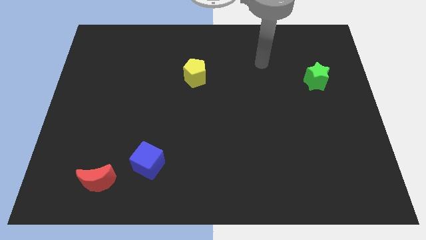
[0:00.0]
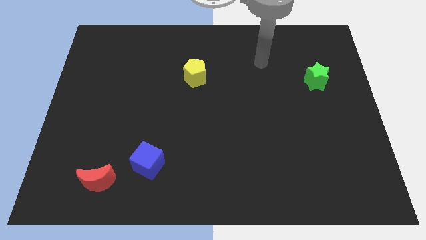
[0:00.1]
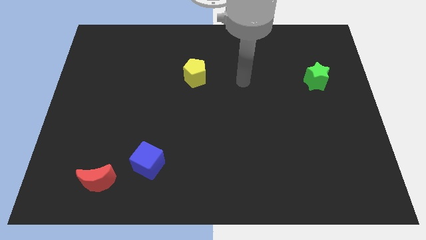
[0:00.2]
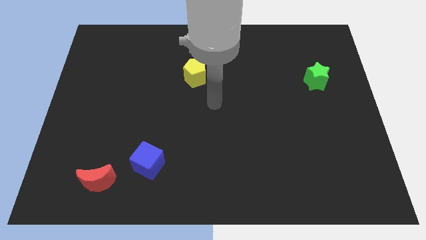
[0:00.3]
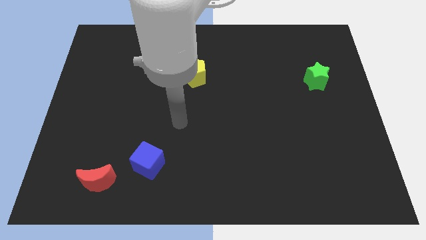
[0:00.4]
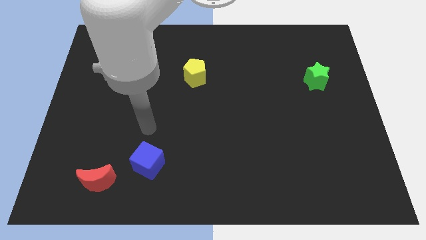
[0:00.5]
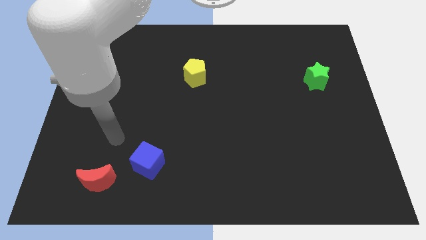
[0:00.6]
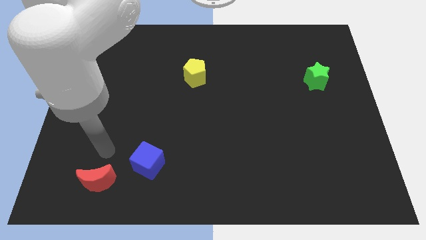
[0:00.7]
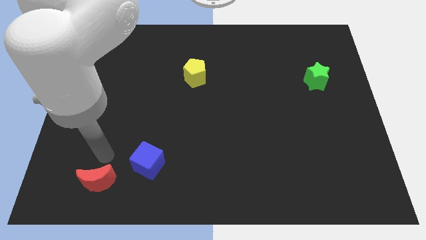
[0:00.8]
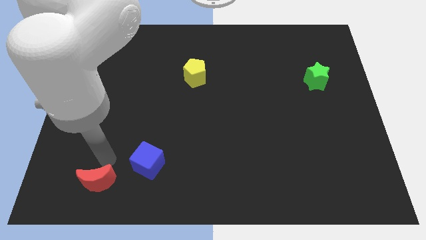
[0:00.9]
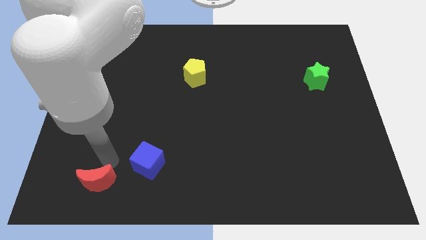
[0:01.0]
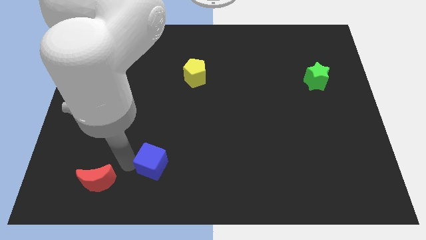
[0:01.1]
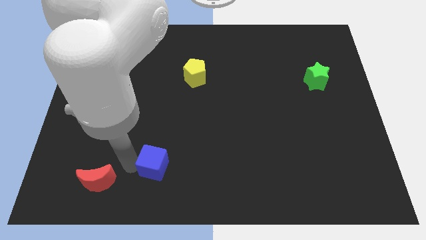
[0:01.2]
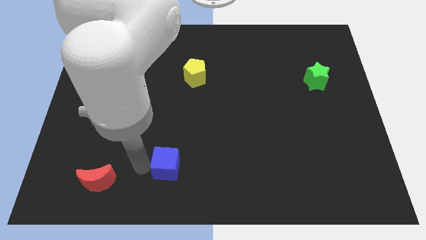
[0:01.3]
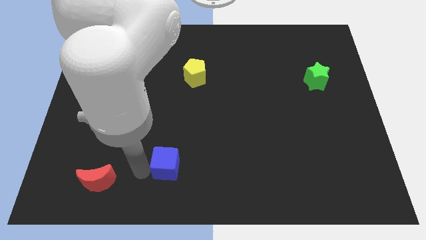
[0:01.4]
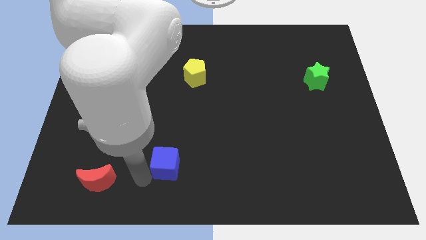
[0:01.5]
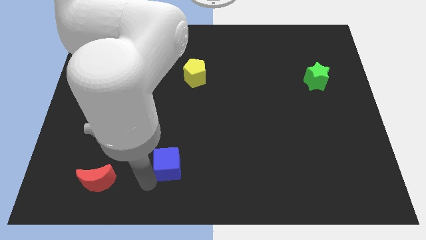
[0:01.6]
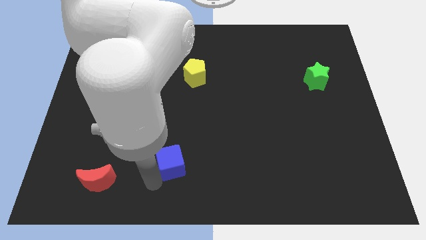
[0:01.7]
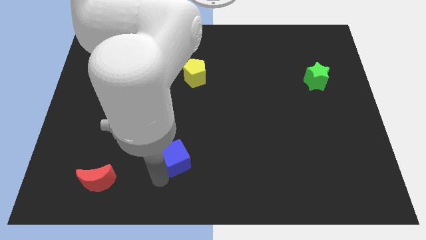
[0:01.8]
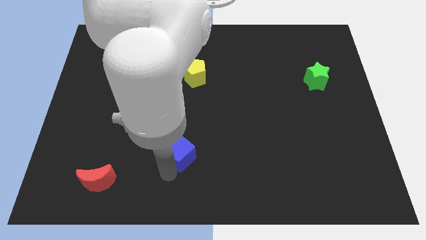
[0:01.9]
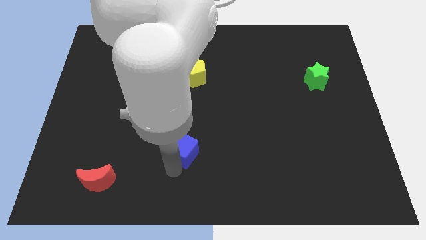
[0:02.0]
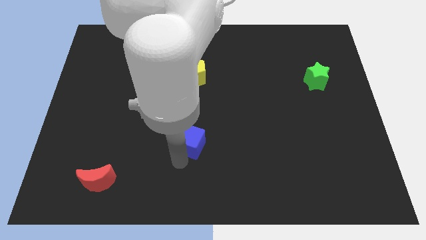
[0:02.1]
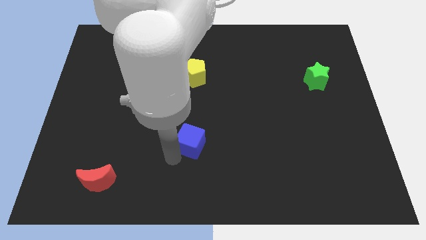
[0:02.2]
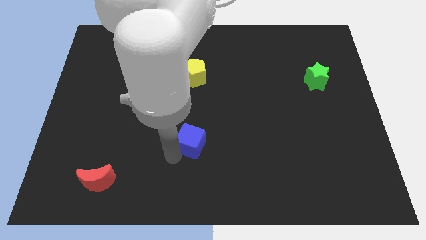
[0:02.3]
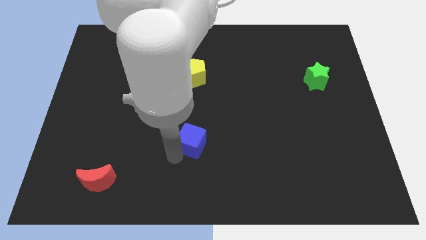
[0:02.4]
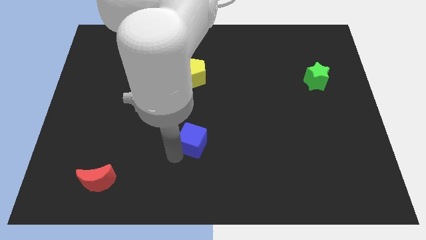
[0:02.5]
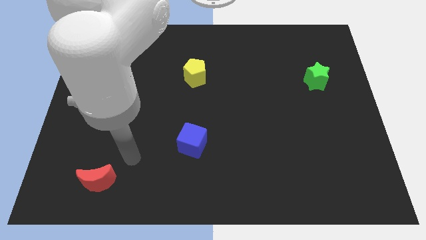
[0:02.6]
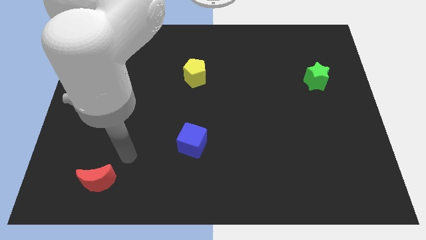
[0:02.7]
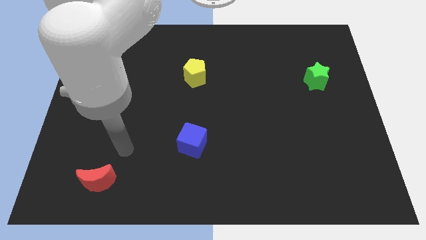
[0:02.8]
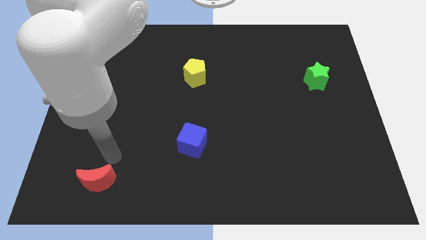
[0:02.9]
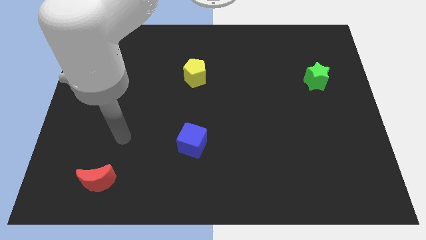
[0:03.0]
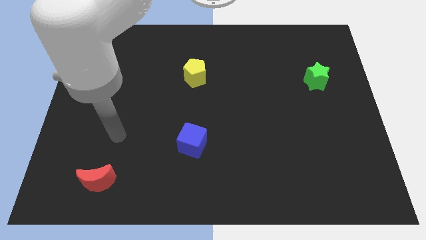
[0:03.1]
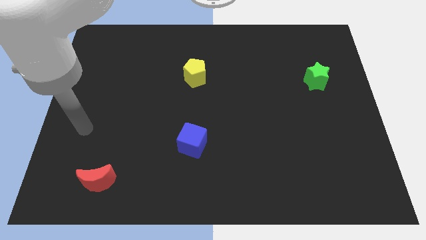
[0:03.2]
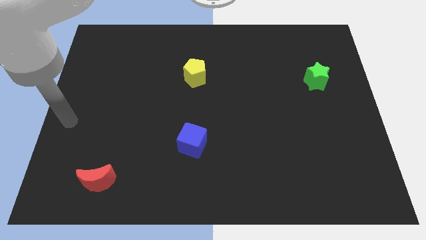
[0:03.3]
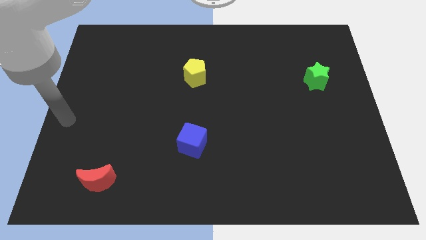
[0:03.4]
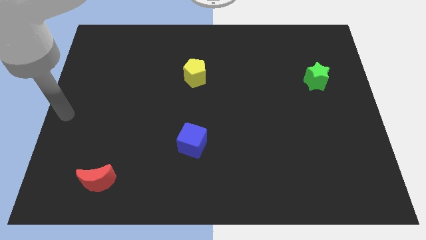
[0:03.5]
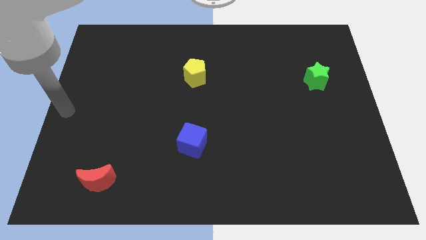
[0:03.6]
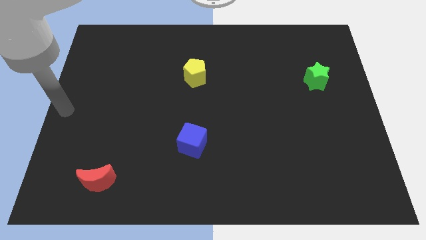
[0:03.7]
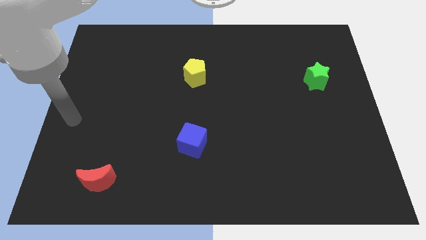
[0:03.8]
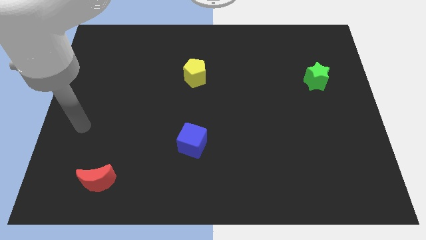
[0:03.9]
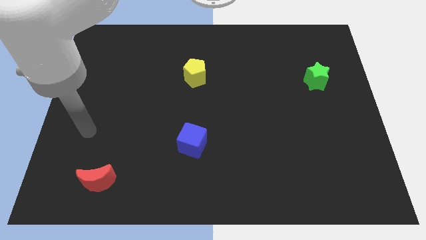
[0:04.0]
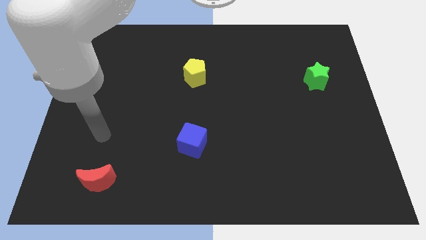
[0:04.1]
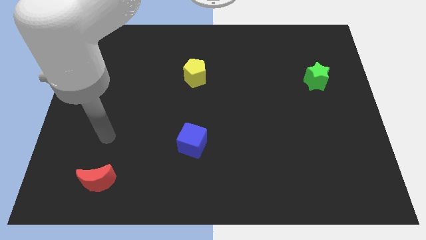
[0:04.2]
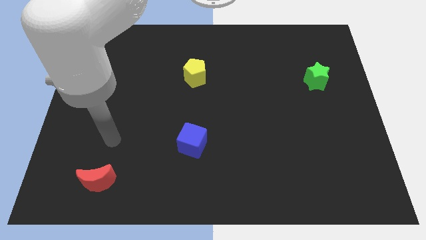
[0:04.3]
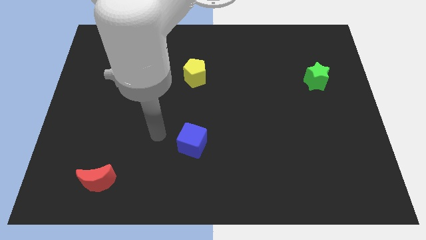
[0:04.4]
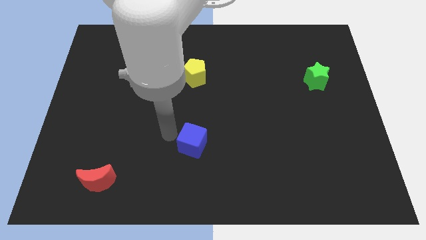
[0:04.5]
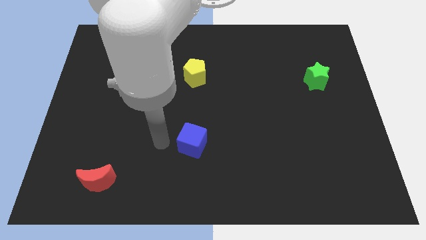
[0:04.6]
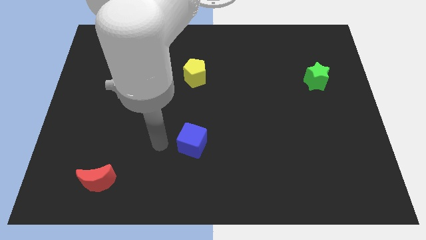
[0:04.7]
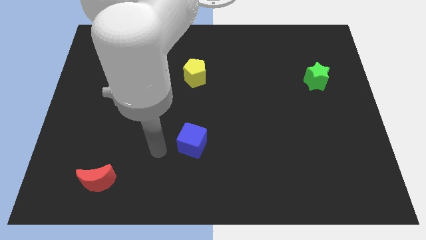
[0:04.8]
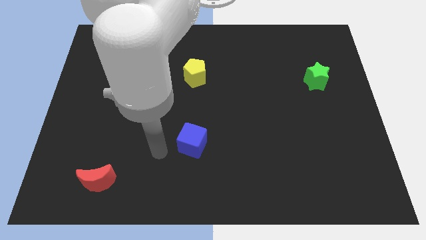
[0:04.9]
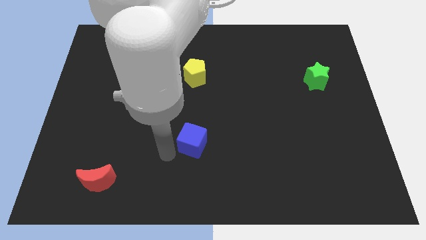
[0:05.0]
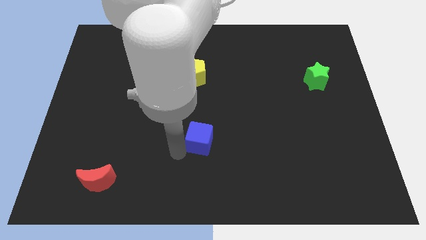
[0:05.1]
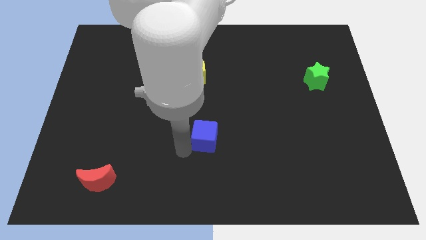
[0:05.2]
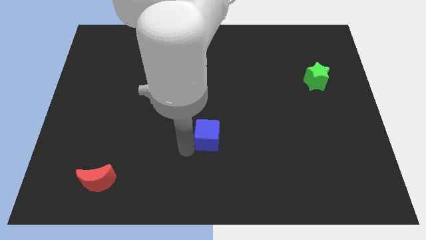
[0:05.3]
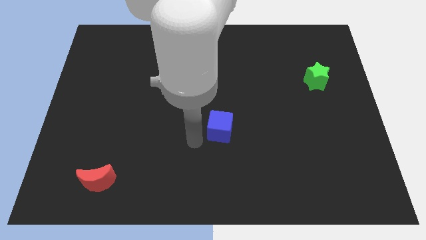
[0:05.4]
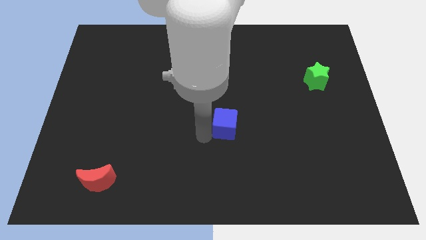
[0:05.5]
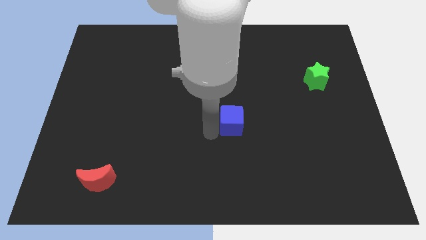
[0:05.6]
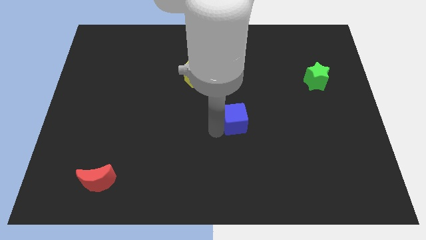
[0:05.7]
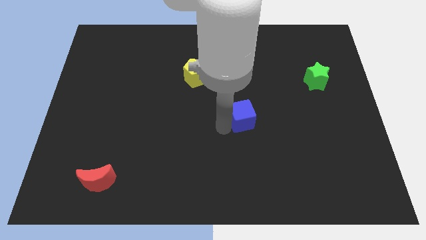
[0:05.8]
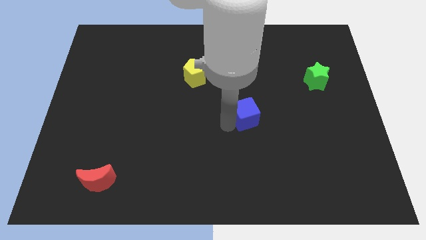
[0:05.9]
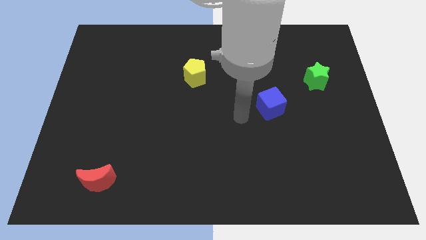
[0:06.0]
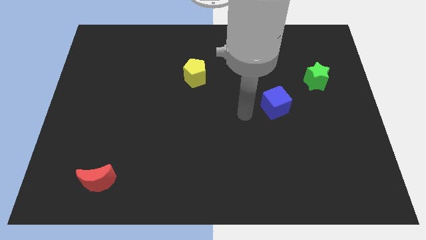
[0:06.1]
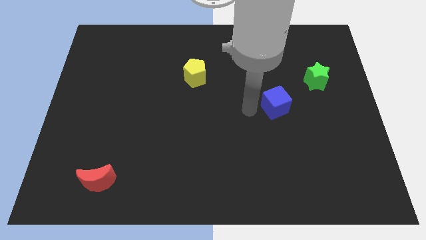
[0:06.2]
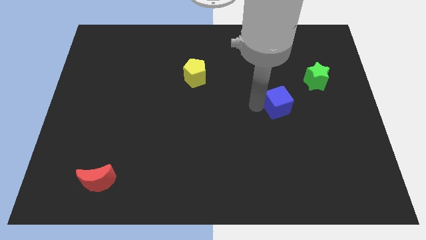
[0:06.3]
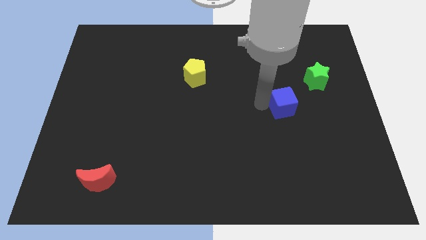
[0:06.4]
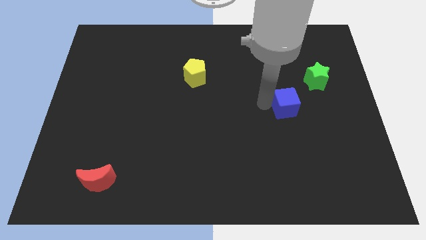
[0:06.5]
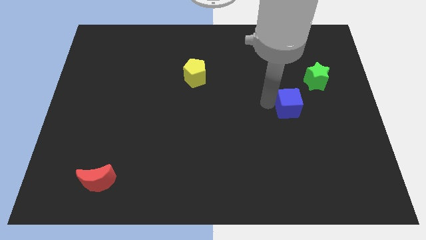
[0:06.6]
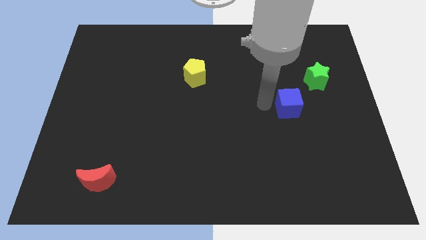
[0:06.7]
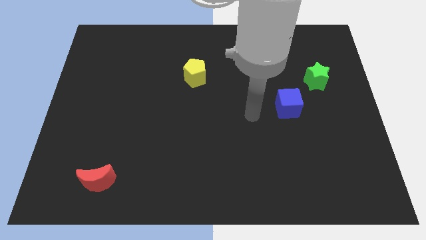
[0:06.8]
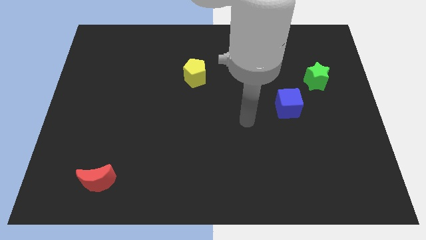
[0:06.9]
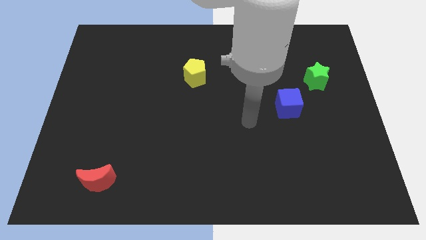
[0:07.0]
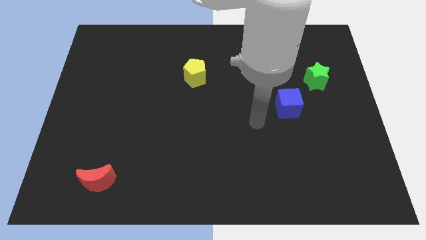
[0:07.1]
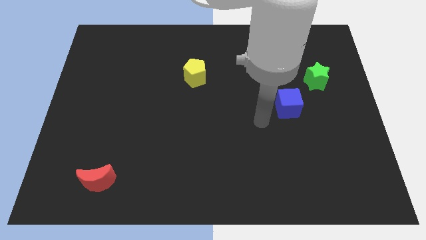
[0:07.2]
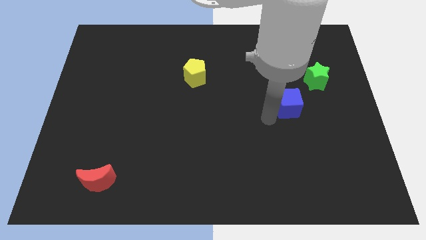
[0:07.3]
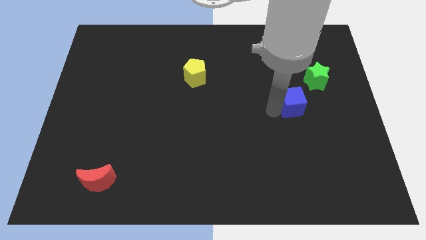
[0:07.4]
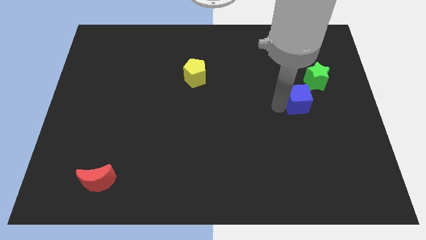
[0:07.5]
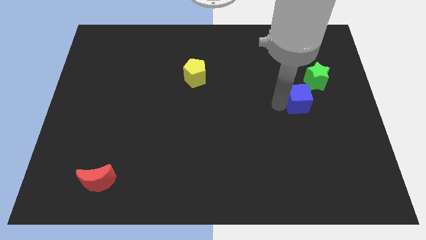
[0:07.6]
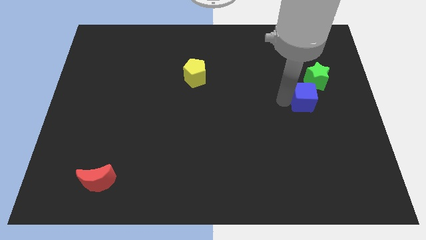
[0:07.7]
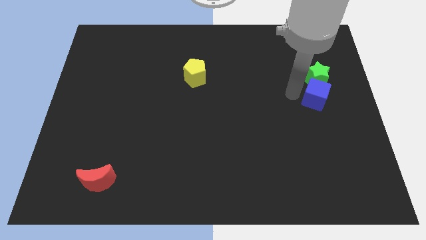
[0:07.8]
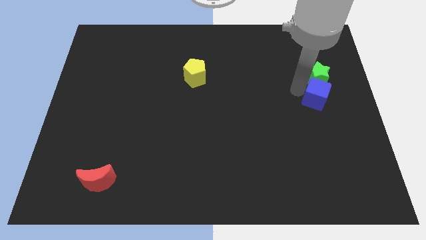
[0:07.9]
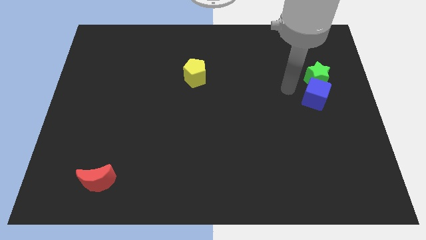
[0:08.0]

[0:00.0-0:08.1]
put the blue cube close to the green star
